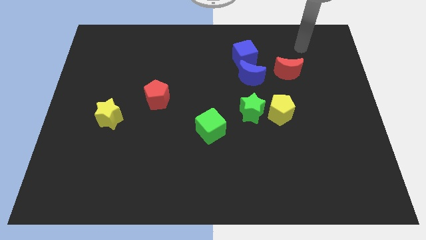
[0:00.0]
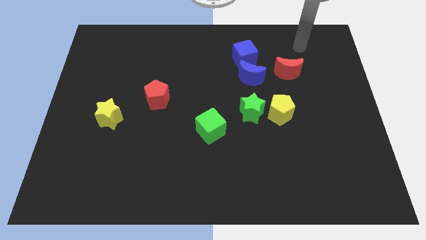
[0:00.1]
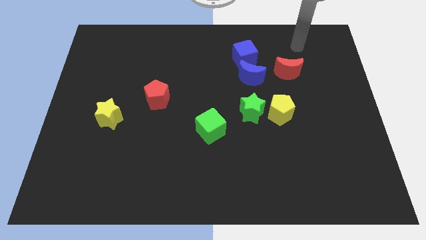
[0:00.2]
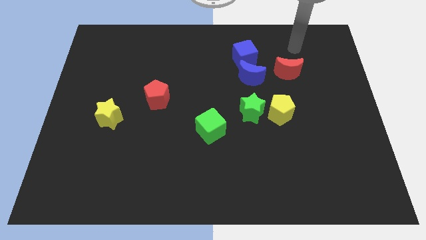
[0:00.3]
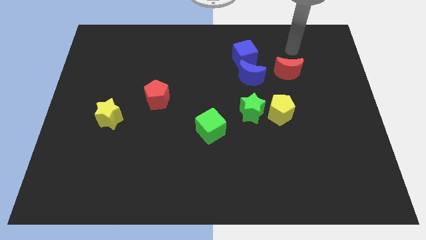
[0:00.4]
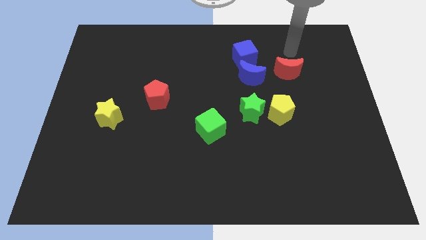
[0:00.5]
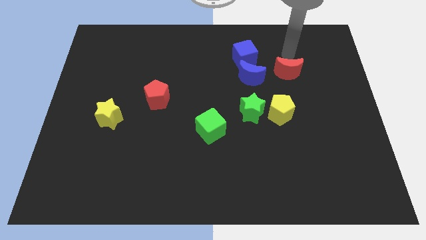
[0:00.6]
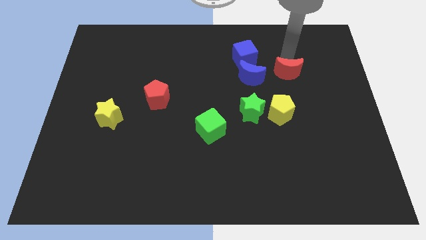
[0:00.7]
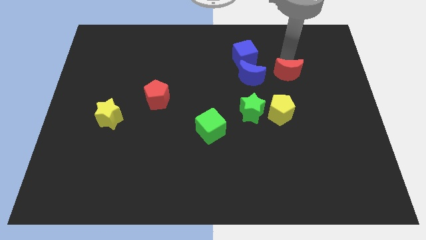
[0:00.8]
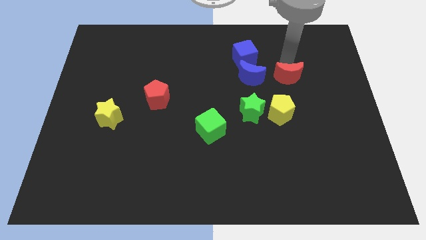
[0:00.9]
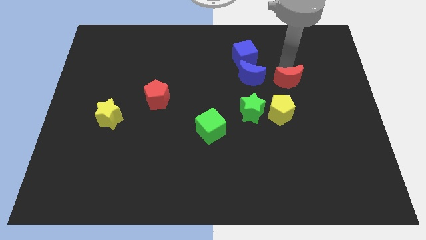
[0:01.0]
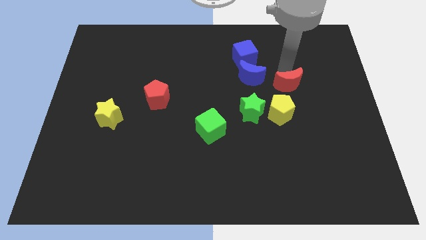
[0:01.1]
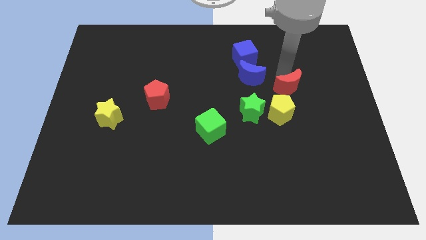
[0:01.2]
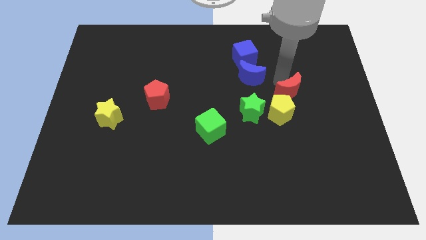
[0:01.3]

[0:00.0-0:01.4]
slightly move the red moon towards down

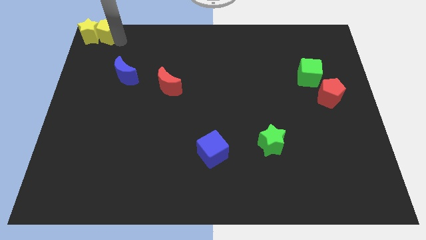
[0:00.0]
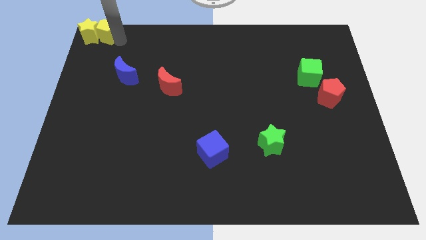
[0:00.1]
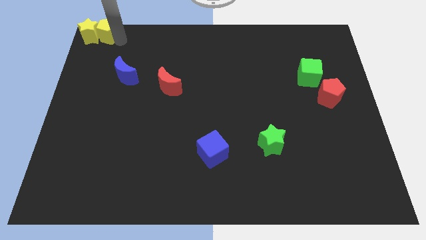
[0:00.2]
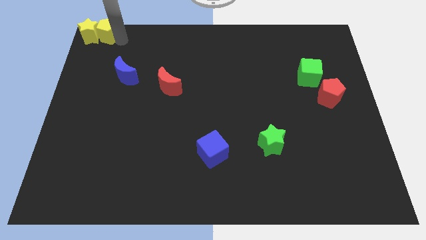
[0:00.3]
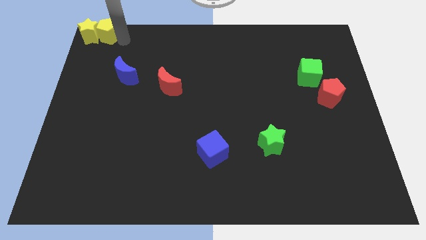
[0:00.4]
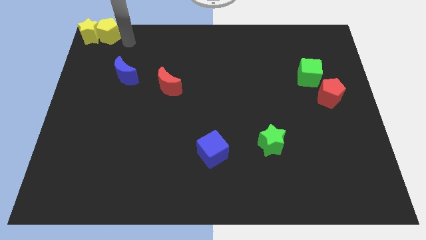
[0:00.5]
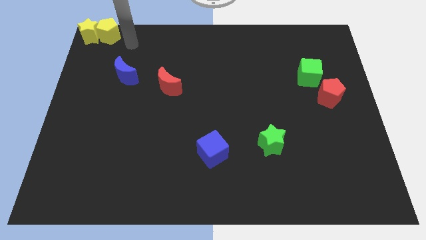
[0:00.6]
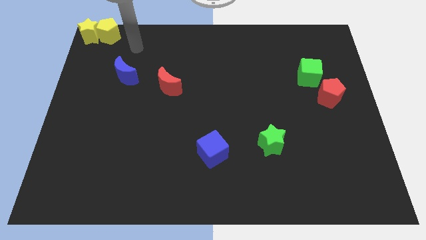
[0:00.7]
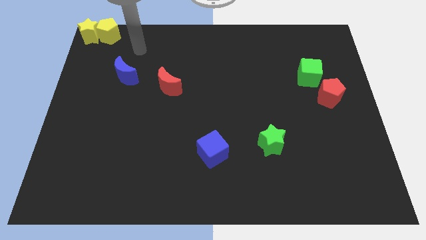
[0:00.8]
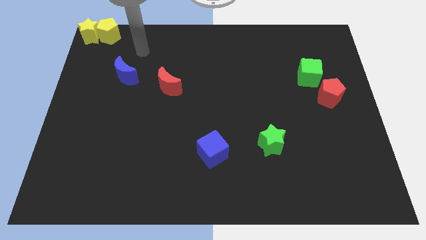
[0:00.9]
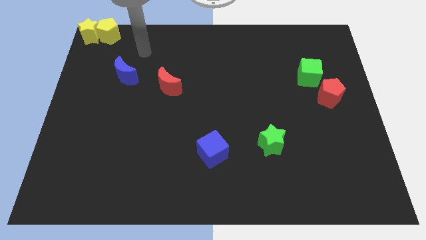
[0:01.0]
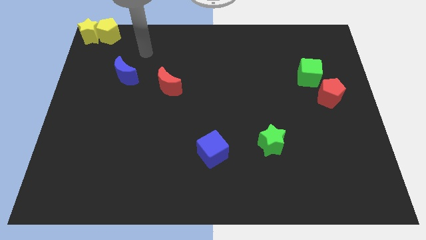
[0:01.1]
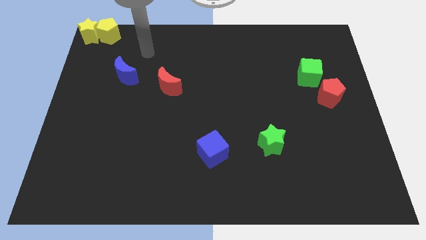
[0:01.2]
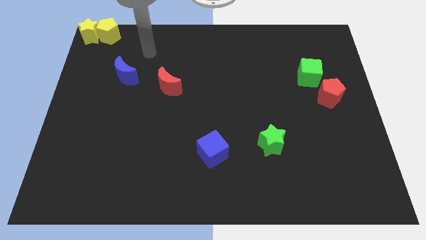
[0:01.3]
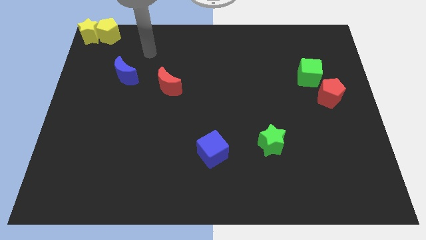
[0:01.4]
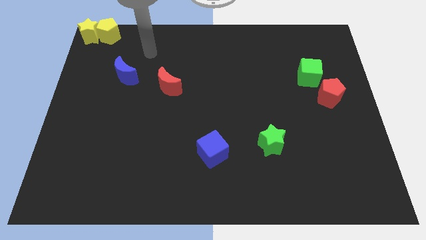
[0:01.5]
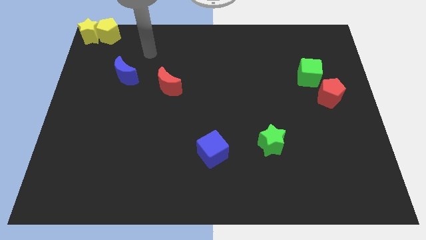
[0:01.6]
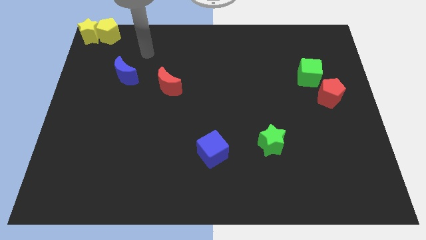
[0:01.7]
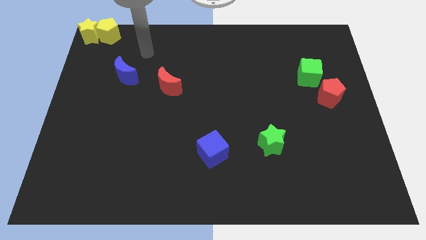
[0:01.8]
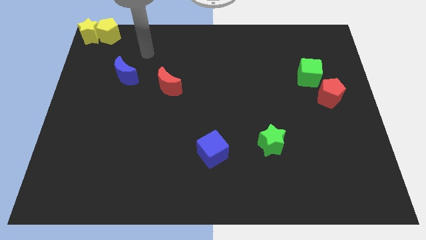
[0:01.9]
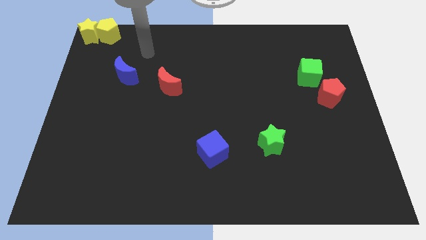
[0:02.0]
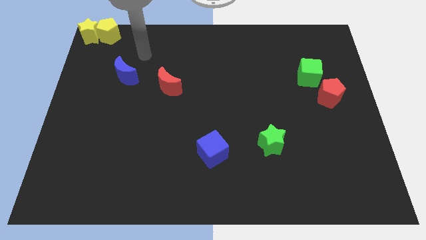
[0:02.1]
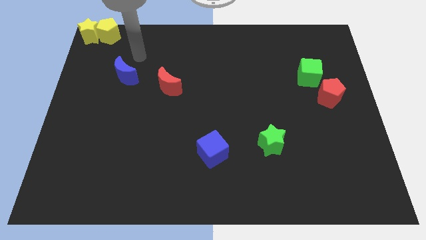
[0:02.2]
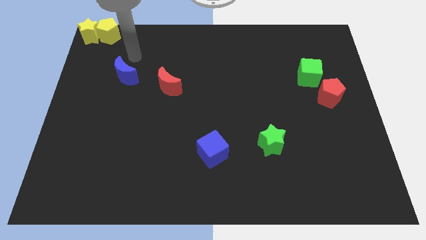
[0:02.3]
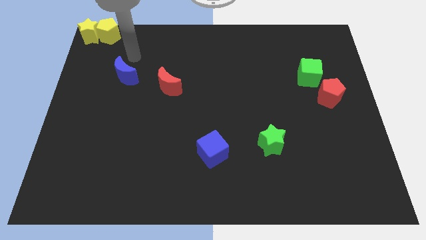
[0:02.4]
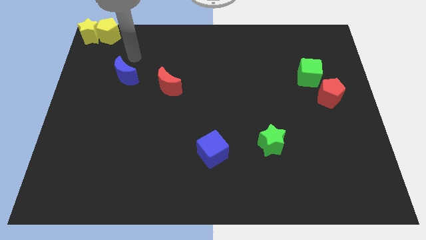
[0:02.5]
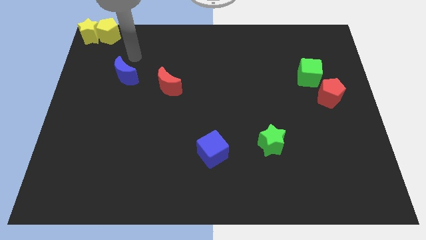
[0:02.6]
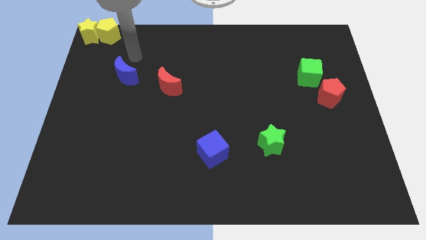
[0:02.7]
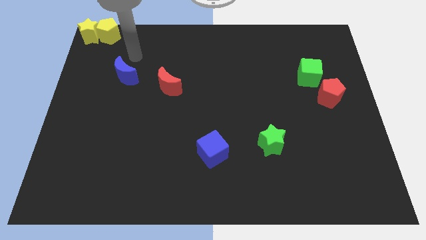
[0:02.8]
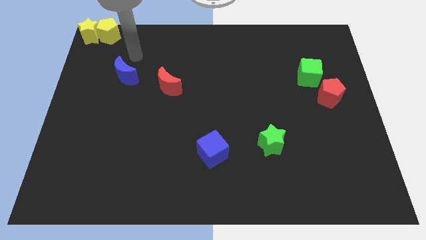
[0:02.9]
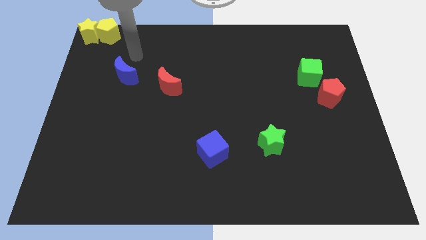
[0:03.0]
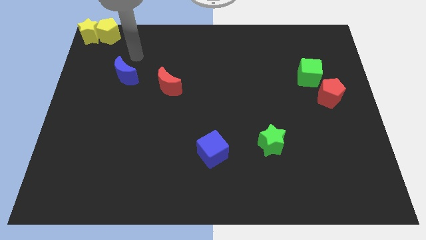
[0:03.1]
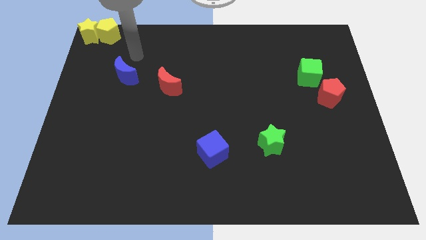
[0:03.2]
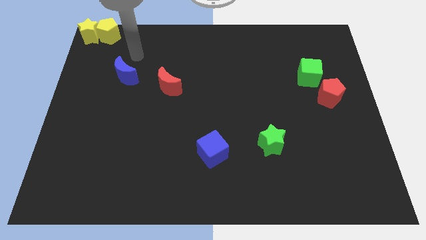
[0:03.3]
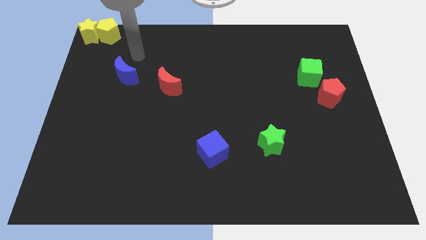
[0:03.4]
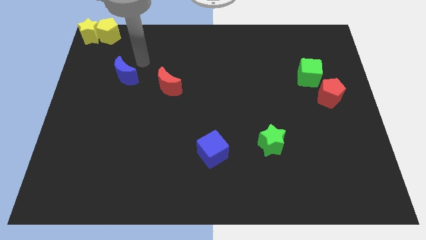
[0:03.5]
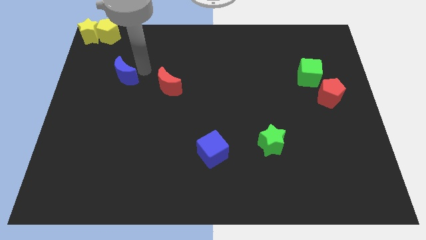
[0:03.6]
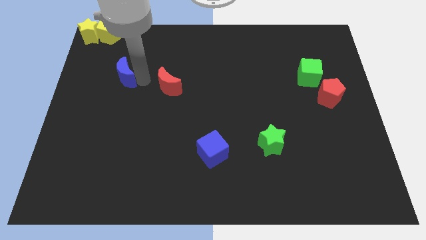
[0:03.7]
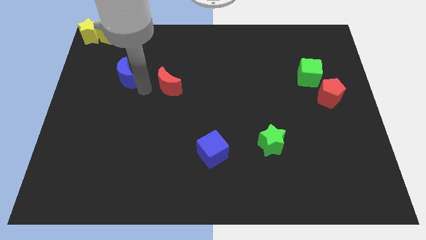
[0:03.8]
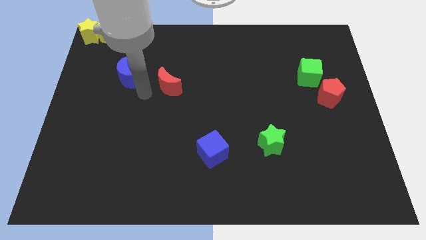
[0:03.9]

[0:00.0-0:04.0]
move your arm to the bottom right to the blue crescent

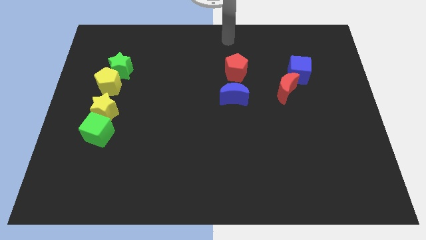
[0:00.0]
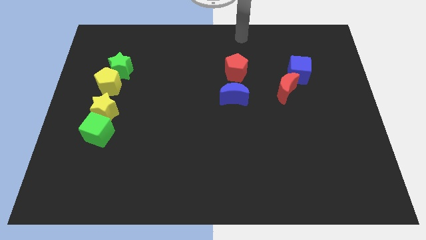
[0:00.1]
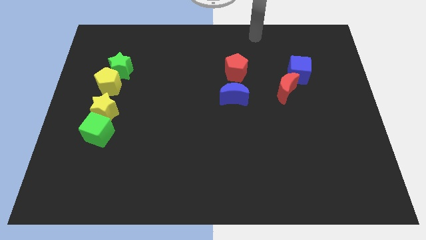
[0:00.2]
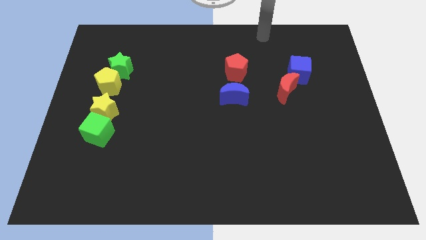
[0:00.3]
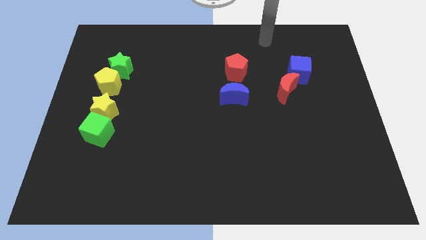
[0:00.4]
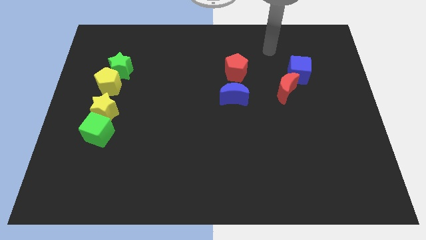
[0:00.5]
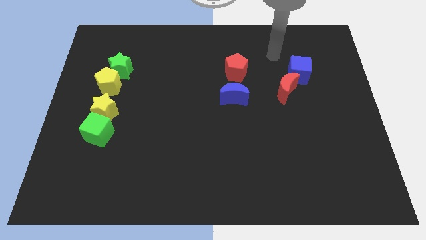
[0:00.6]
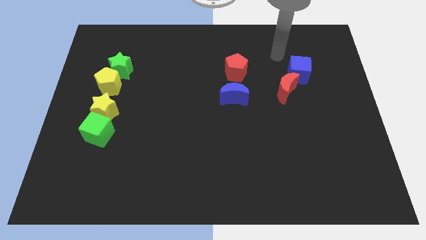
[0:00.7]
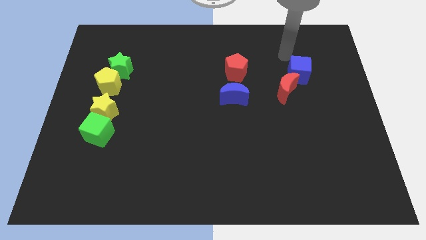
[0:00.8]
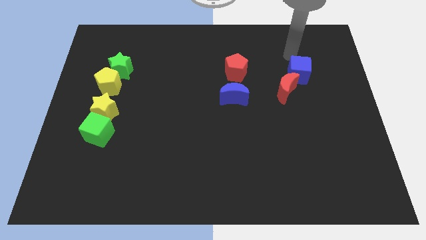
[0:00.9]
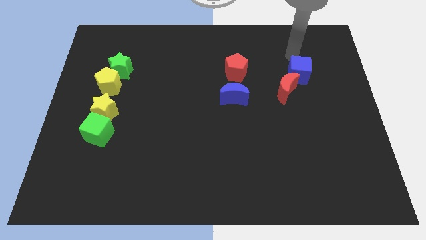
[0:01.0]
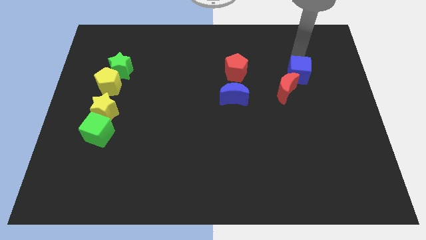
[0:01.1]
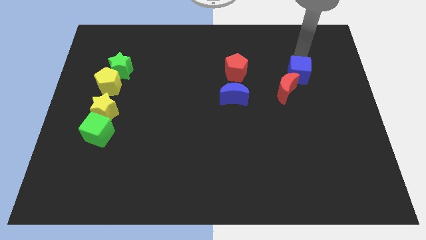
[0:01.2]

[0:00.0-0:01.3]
place your arm above blue cube

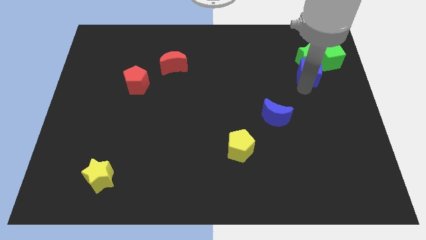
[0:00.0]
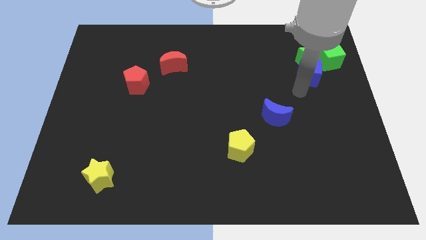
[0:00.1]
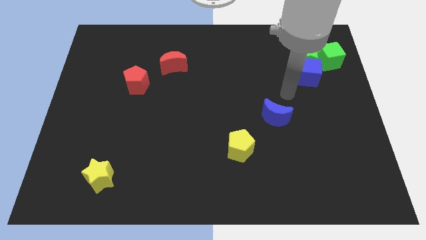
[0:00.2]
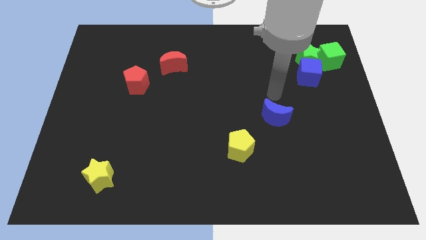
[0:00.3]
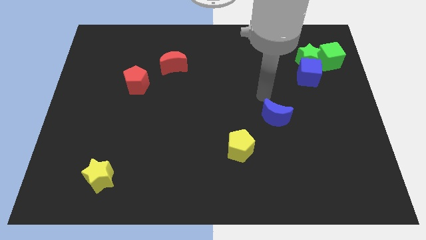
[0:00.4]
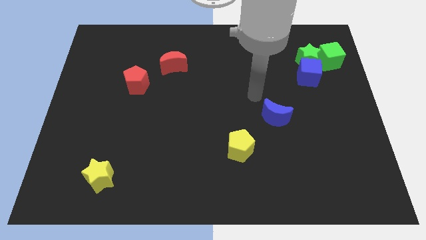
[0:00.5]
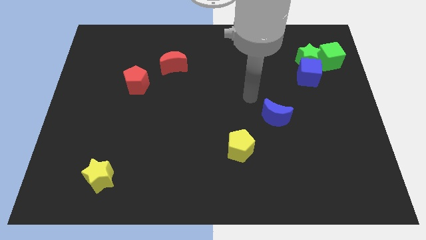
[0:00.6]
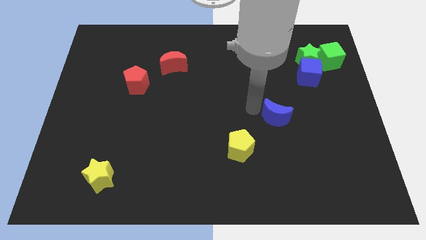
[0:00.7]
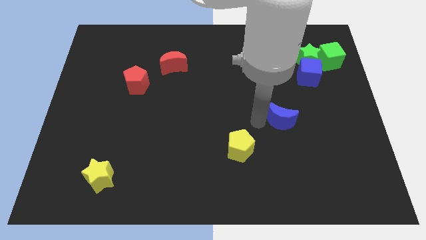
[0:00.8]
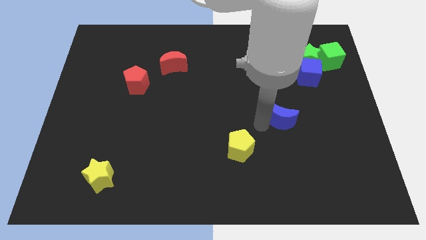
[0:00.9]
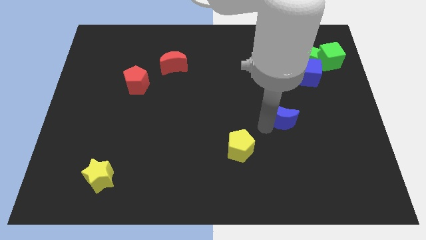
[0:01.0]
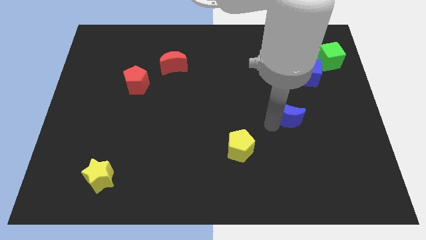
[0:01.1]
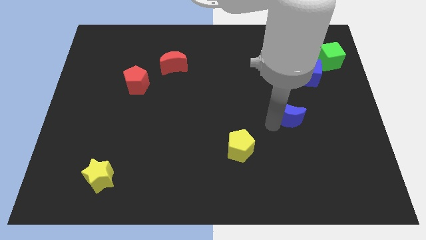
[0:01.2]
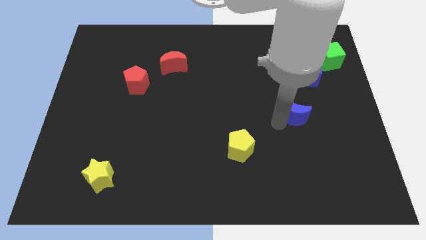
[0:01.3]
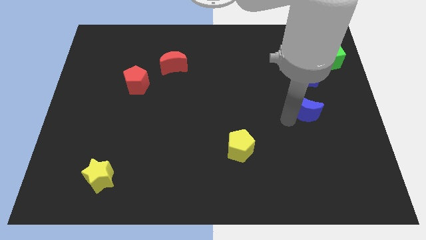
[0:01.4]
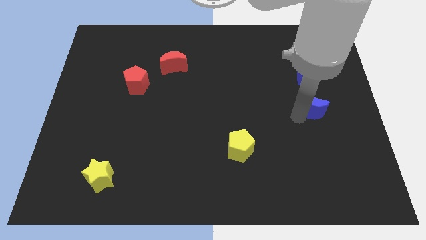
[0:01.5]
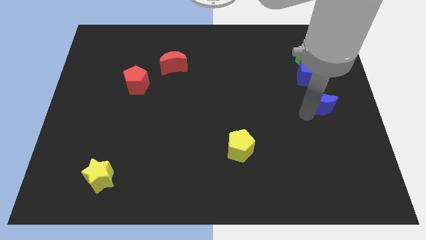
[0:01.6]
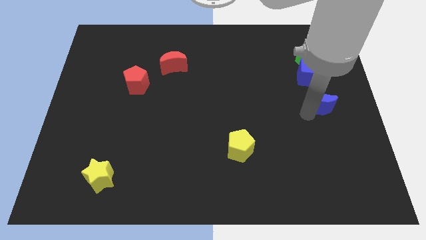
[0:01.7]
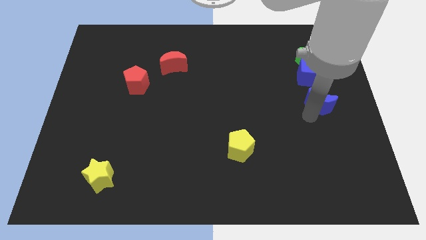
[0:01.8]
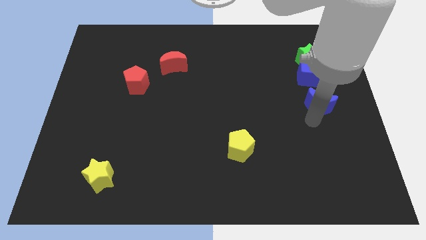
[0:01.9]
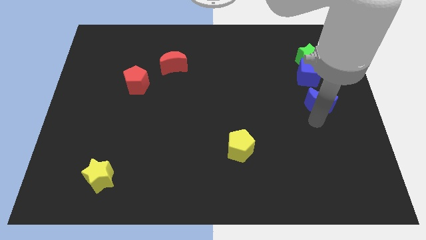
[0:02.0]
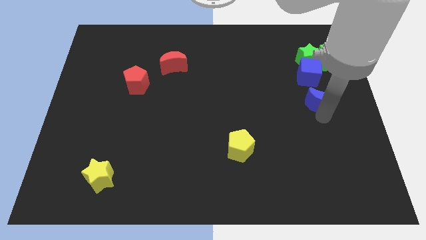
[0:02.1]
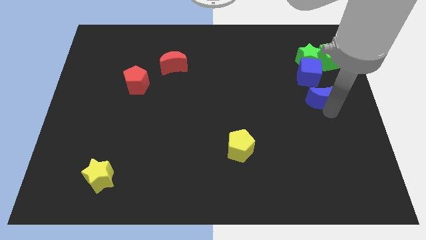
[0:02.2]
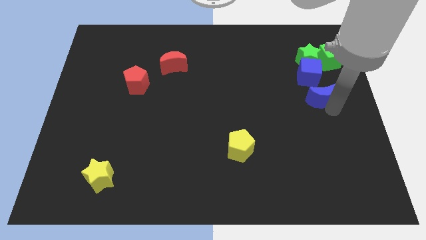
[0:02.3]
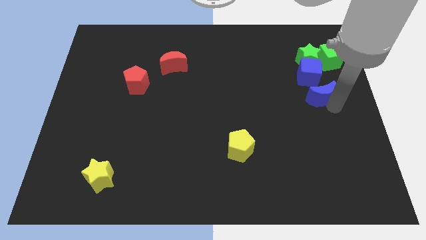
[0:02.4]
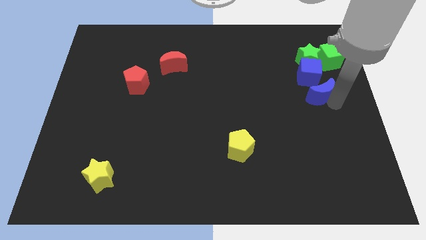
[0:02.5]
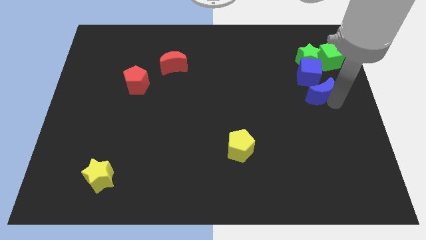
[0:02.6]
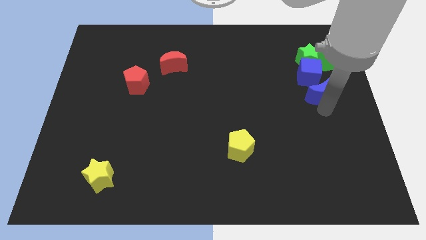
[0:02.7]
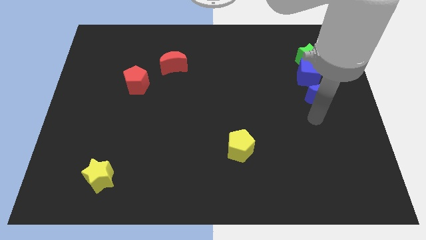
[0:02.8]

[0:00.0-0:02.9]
put the blue moon at the bottom of blue cube
